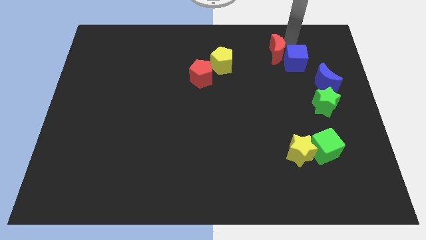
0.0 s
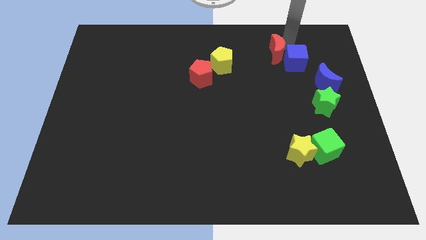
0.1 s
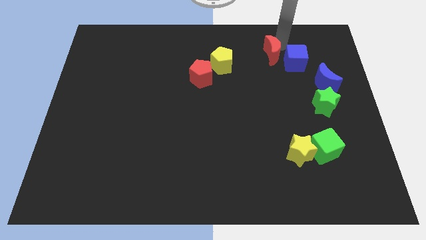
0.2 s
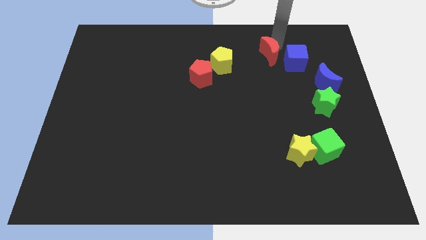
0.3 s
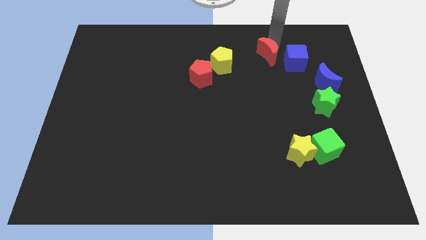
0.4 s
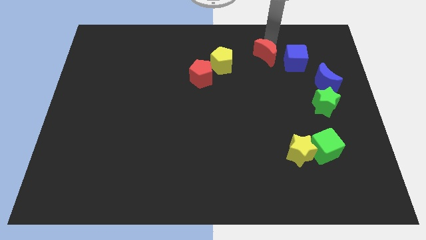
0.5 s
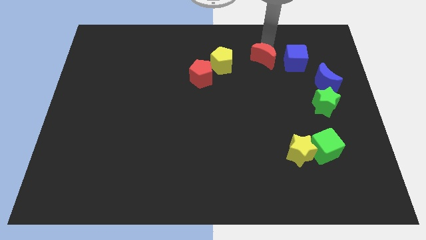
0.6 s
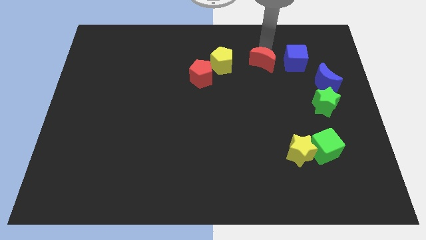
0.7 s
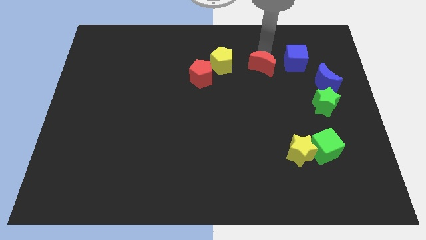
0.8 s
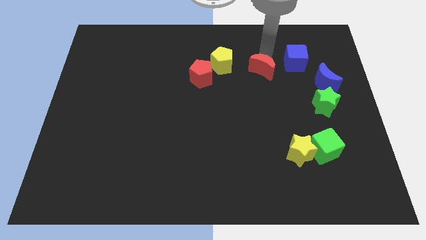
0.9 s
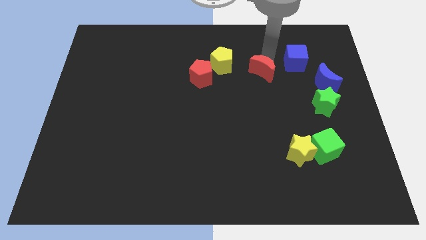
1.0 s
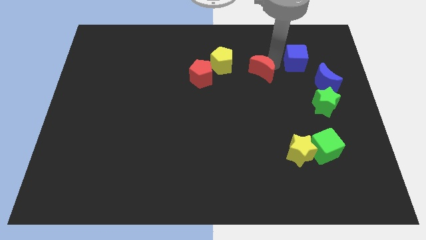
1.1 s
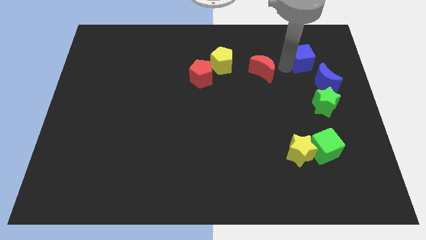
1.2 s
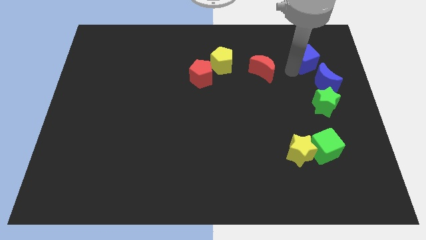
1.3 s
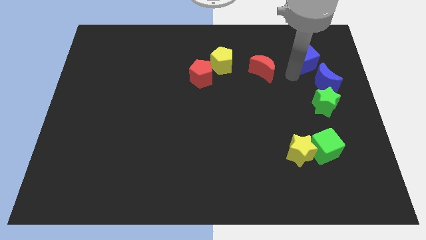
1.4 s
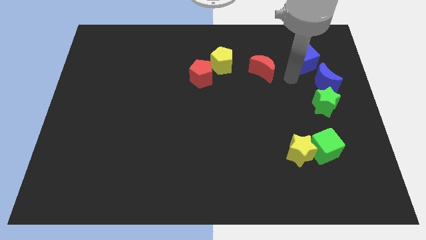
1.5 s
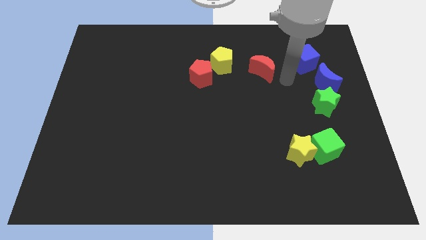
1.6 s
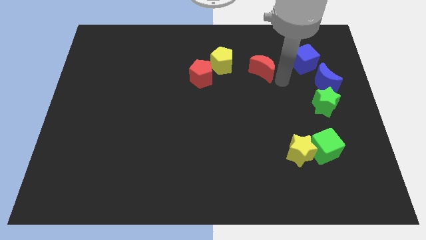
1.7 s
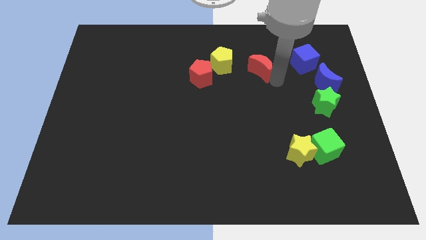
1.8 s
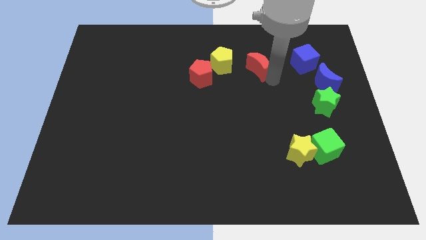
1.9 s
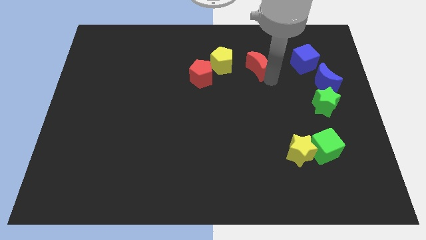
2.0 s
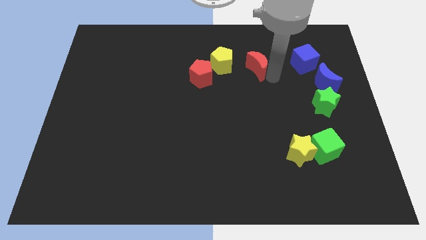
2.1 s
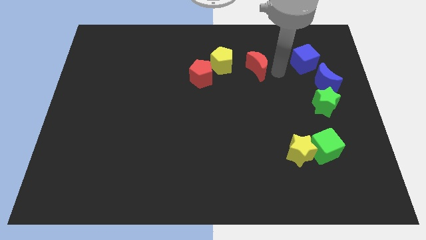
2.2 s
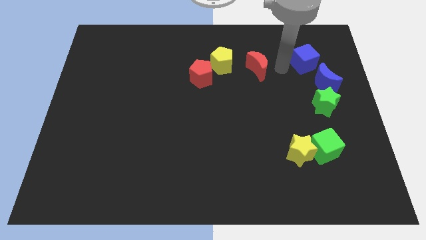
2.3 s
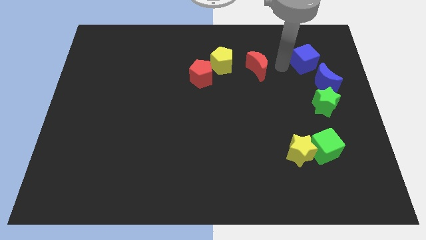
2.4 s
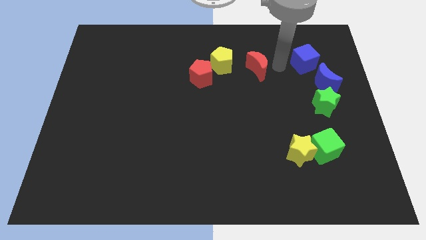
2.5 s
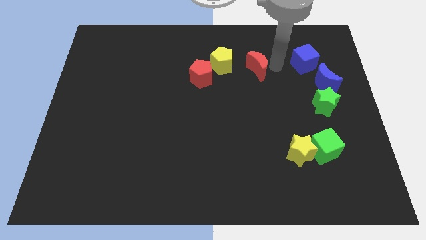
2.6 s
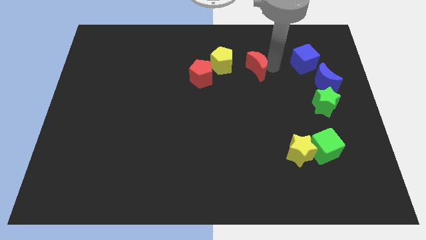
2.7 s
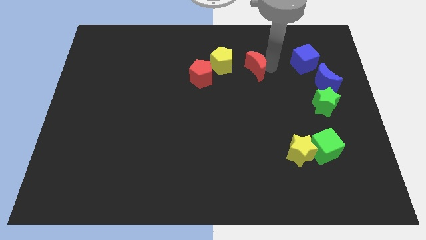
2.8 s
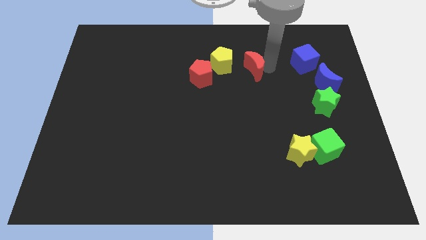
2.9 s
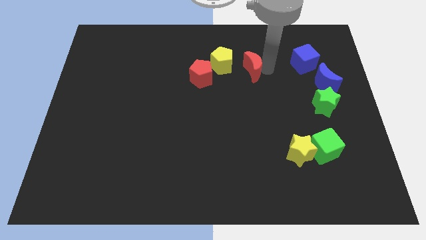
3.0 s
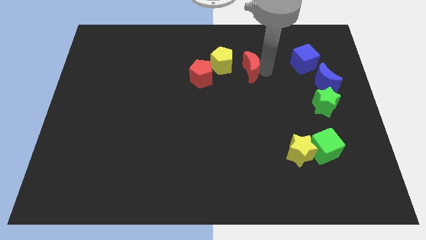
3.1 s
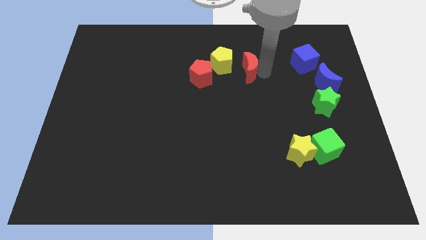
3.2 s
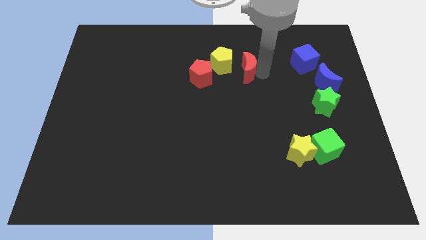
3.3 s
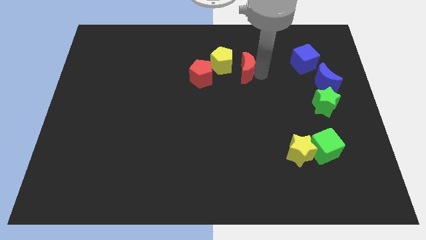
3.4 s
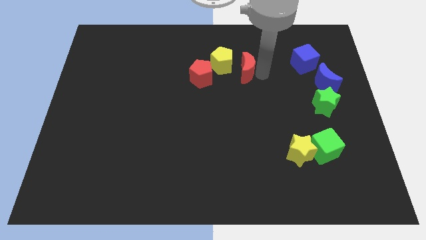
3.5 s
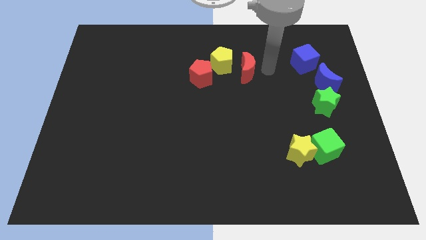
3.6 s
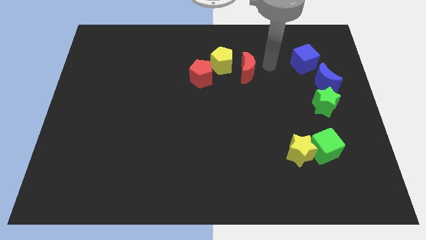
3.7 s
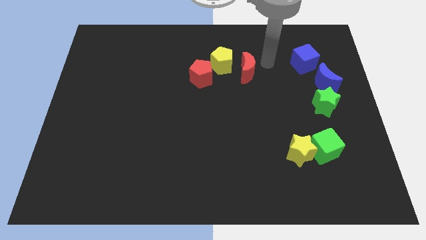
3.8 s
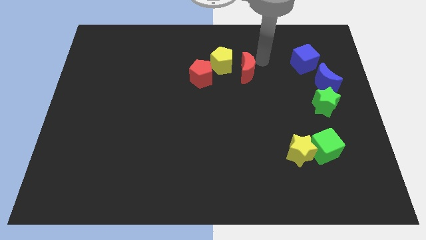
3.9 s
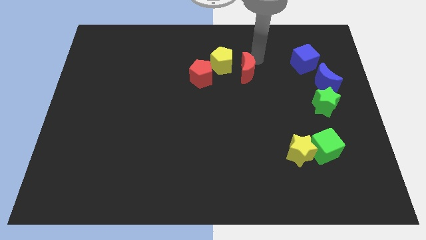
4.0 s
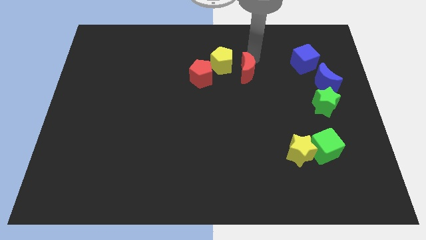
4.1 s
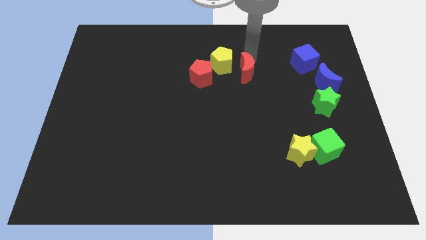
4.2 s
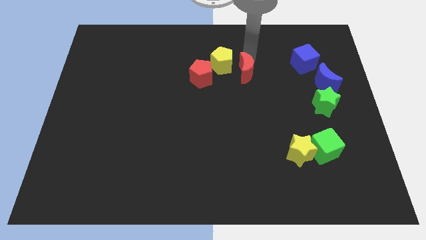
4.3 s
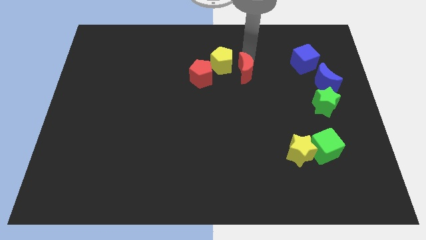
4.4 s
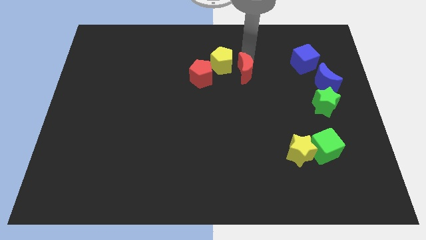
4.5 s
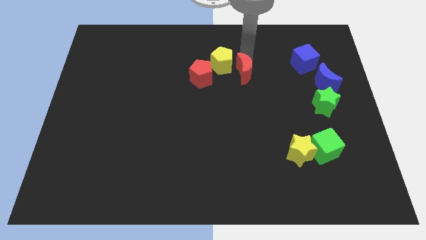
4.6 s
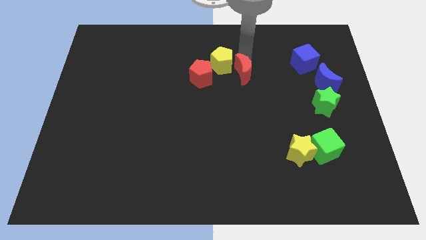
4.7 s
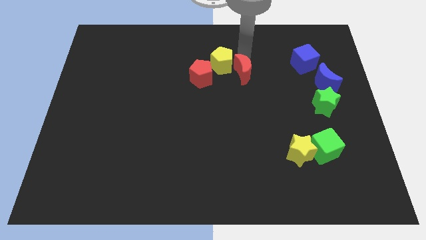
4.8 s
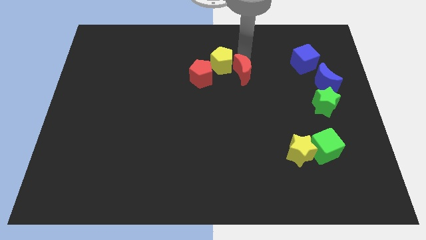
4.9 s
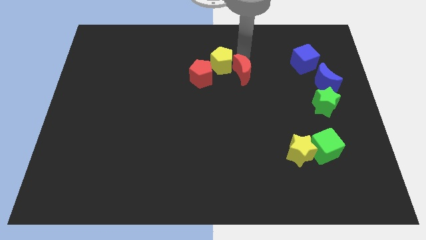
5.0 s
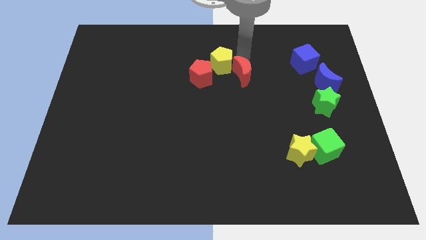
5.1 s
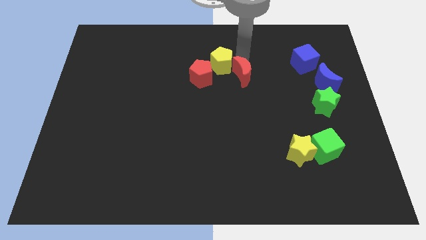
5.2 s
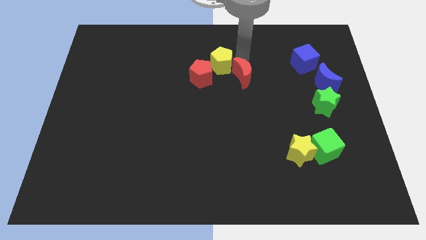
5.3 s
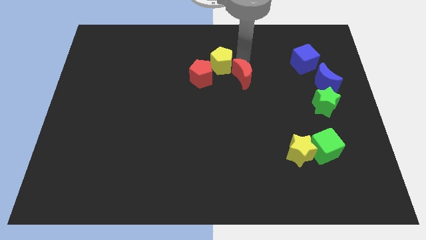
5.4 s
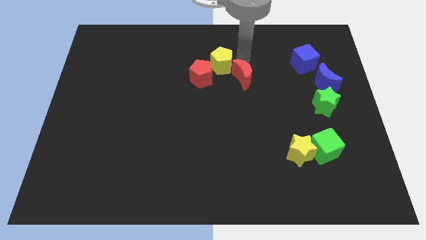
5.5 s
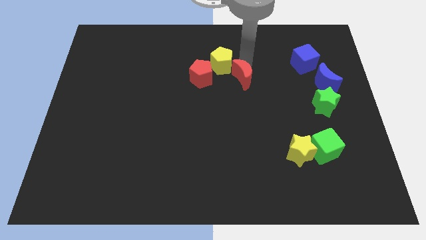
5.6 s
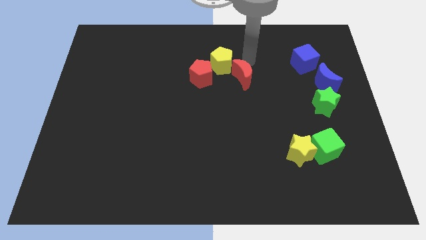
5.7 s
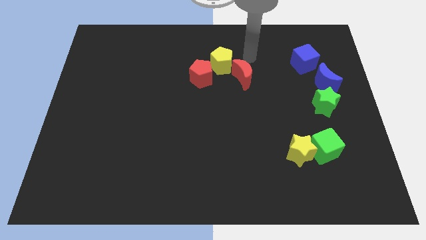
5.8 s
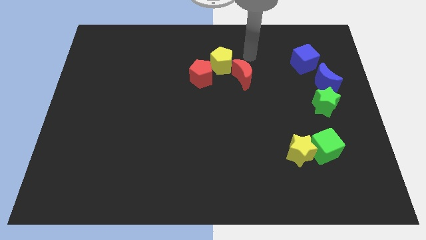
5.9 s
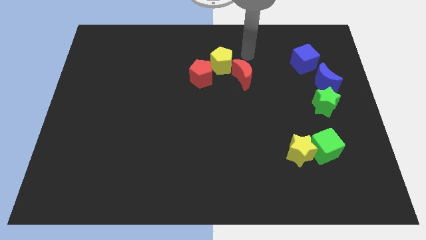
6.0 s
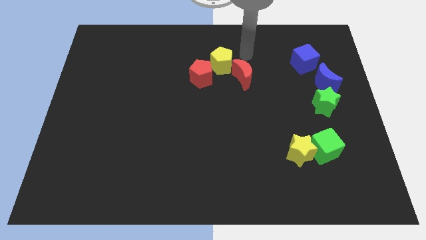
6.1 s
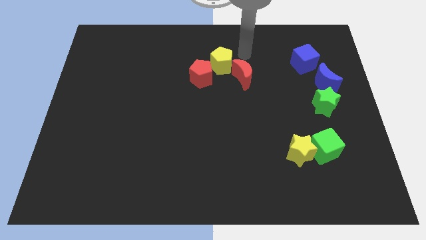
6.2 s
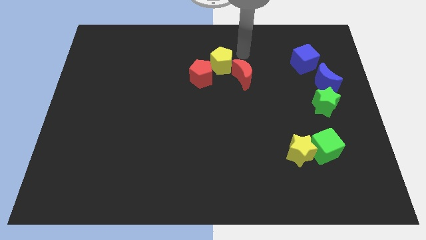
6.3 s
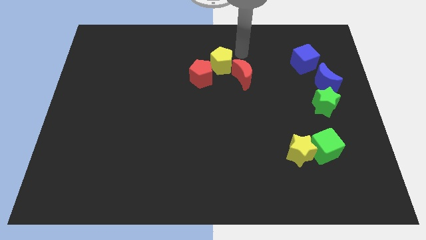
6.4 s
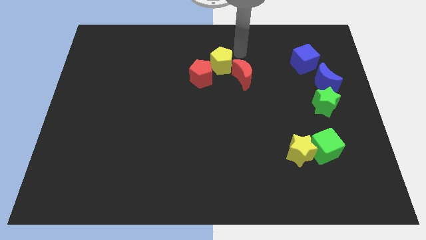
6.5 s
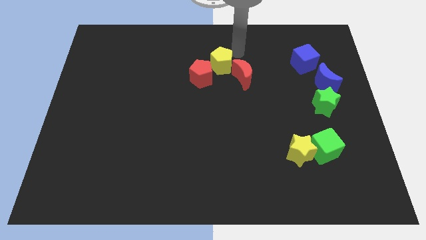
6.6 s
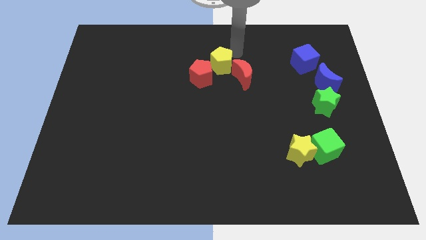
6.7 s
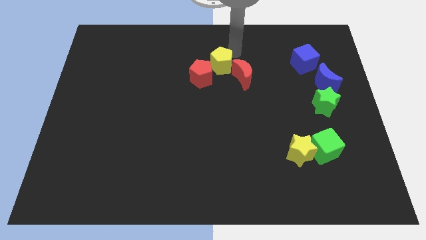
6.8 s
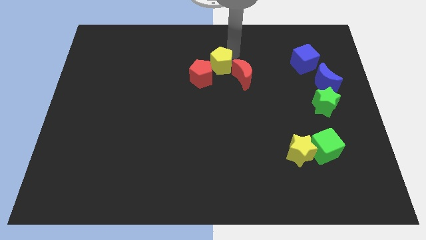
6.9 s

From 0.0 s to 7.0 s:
move the red crescent close to the yellow pentagon

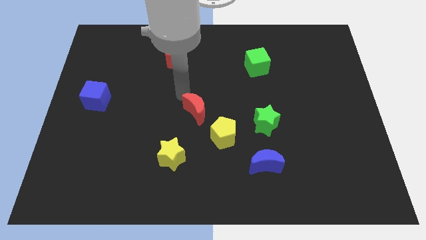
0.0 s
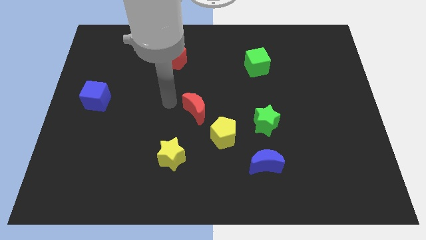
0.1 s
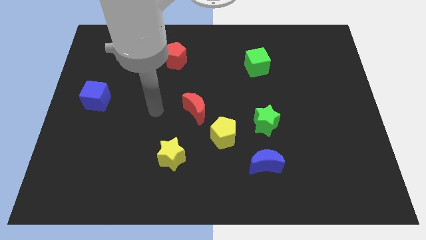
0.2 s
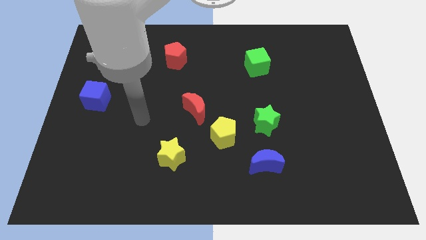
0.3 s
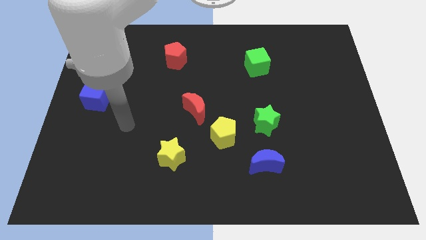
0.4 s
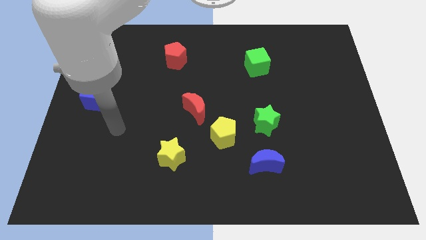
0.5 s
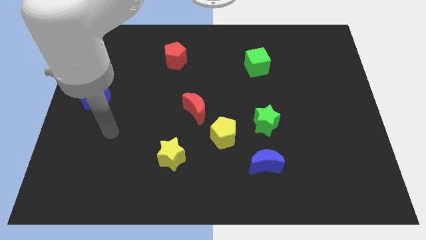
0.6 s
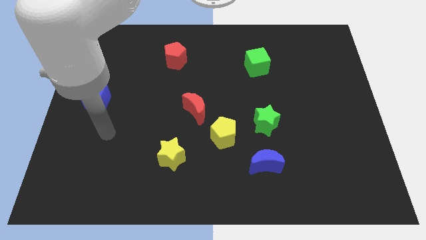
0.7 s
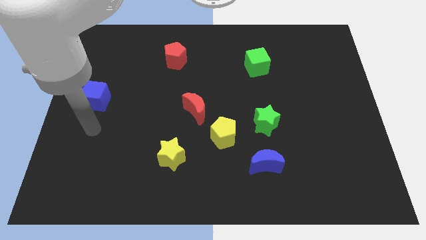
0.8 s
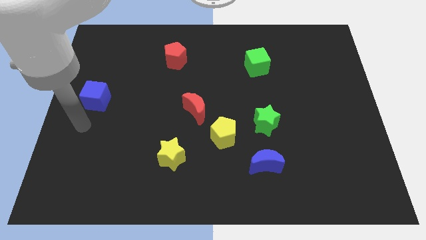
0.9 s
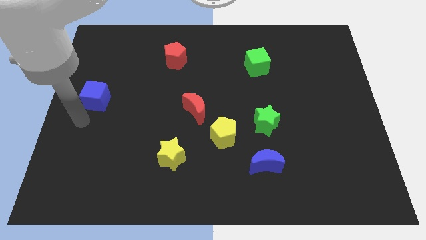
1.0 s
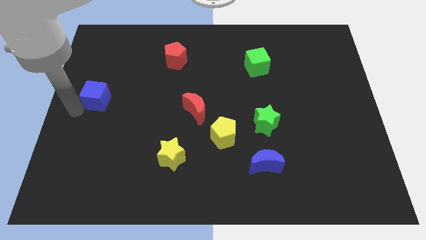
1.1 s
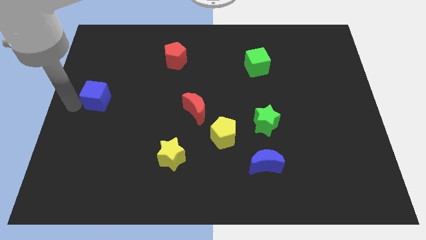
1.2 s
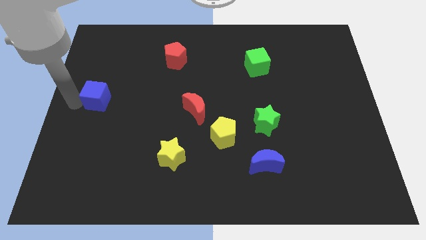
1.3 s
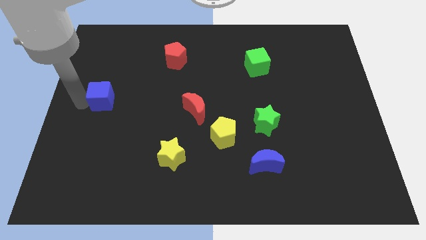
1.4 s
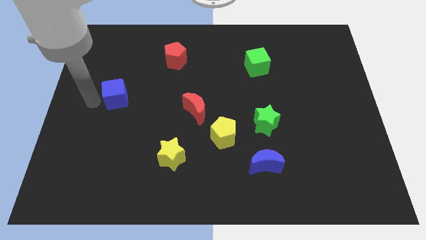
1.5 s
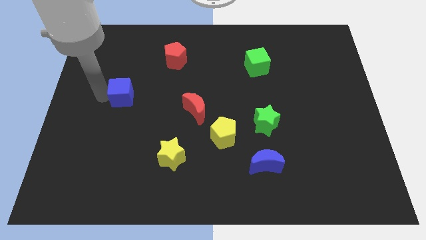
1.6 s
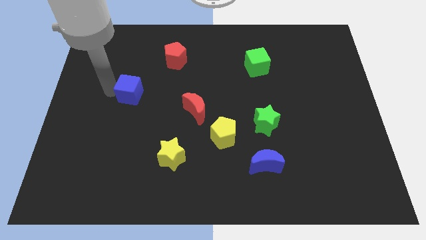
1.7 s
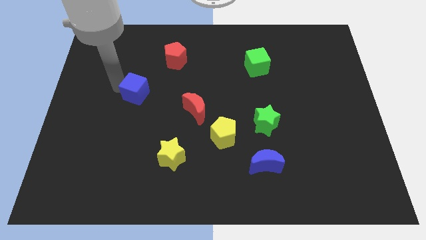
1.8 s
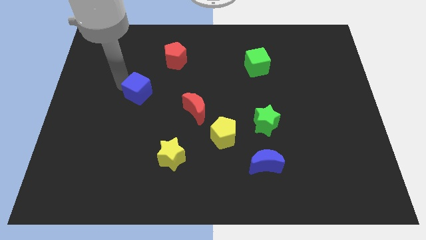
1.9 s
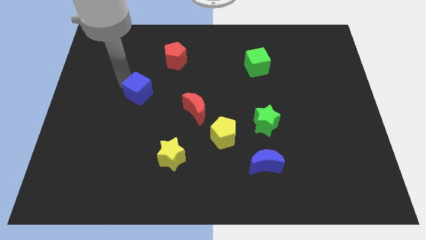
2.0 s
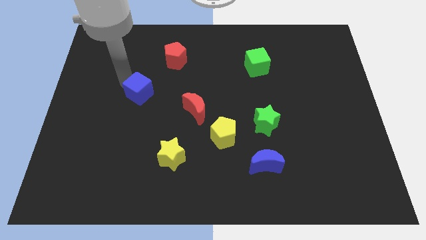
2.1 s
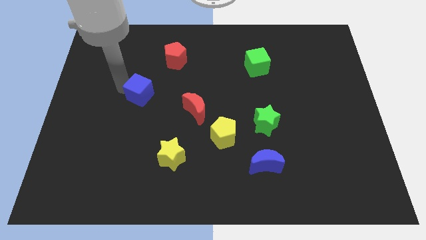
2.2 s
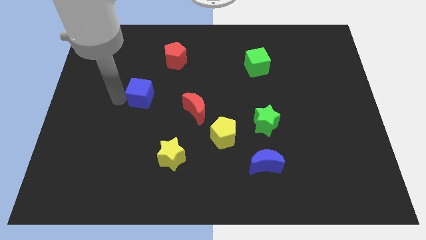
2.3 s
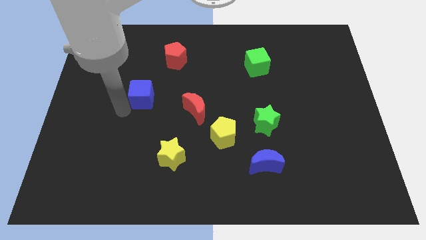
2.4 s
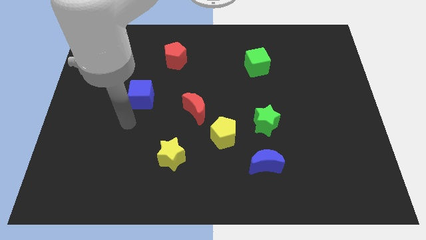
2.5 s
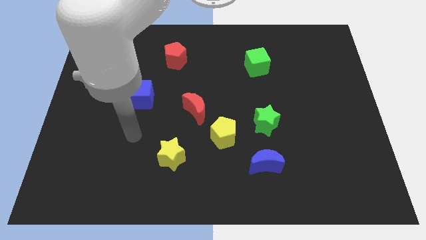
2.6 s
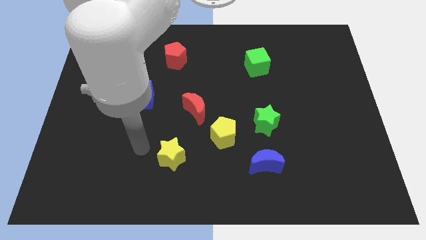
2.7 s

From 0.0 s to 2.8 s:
push the blue cube towards the right
